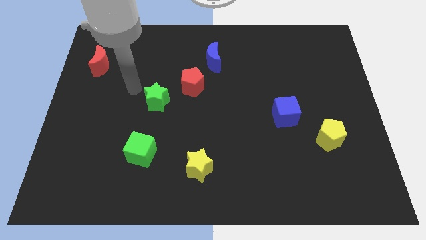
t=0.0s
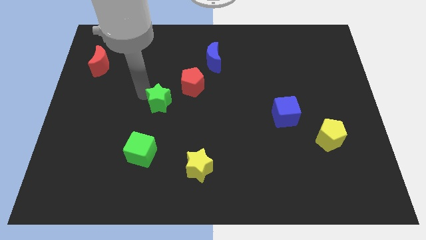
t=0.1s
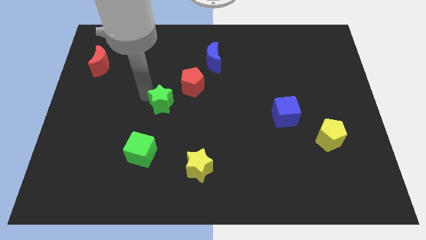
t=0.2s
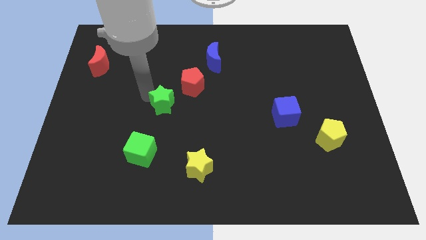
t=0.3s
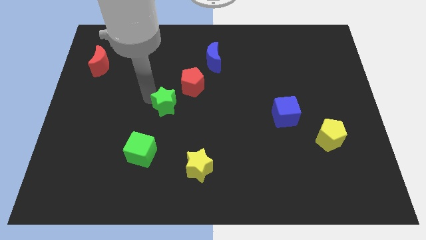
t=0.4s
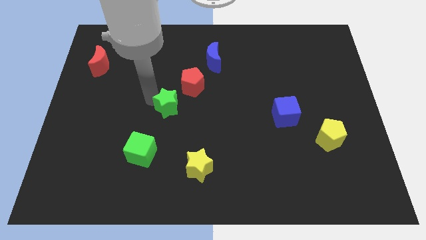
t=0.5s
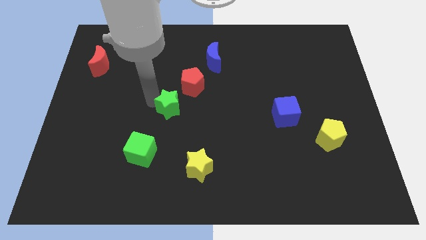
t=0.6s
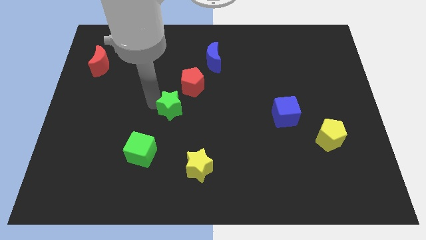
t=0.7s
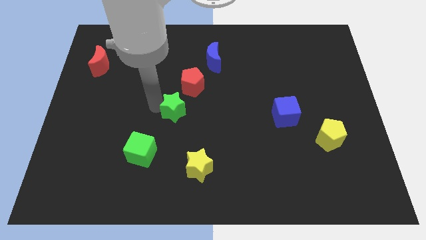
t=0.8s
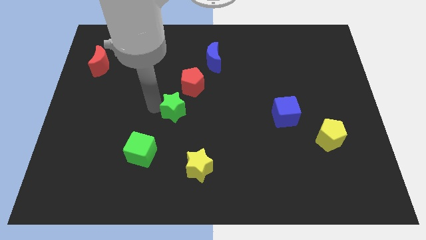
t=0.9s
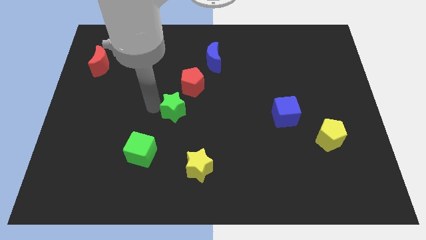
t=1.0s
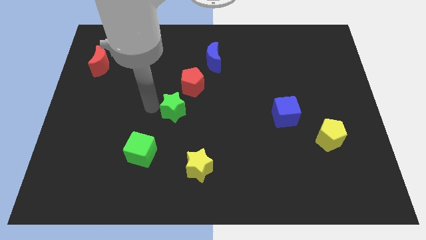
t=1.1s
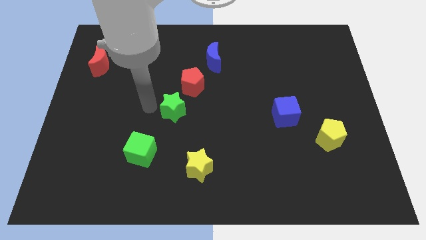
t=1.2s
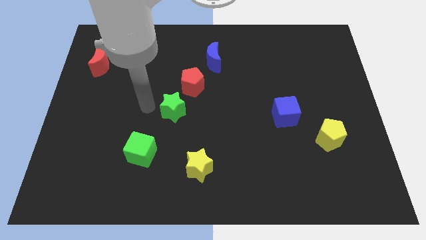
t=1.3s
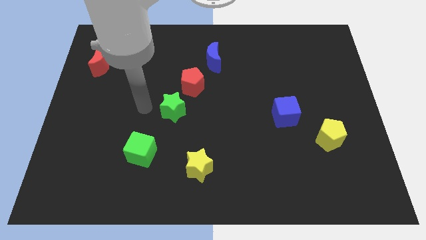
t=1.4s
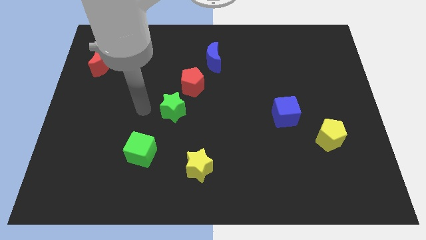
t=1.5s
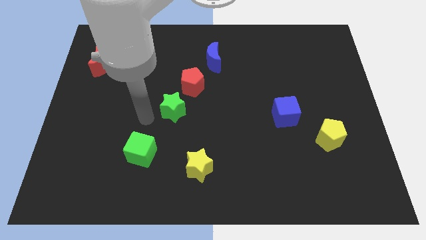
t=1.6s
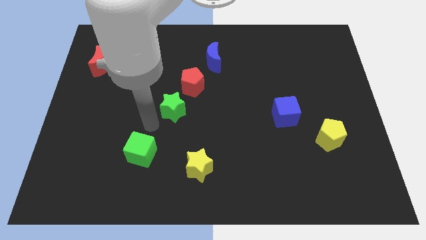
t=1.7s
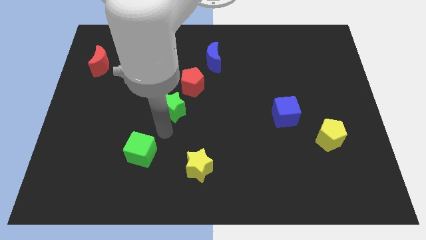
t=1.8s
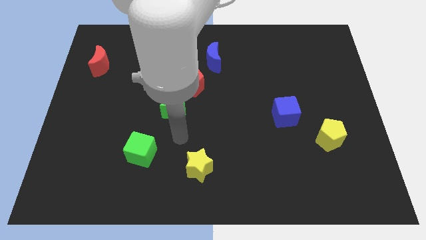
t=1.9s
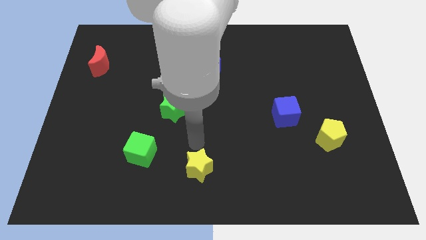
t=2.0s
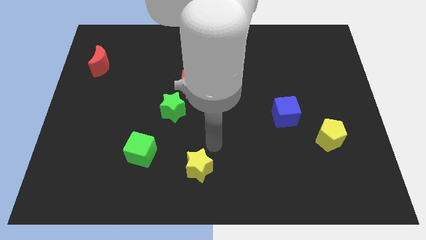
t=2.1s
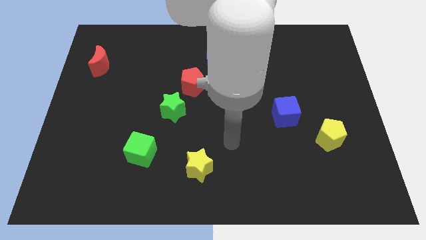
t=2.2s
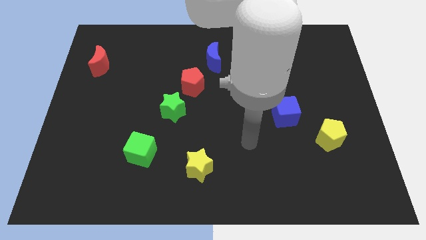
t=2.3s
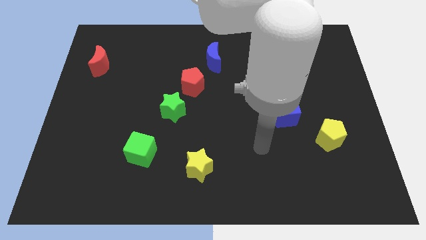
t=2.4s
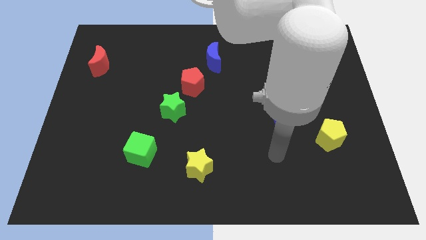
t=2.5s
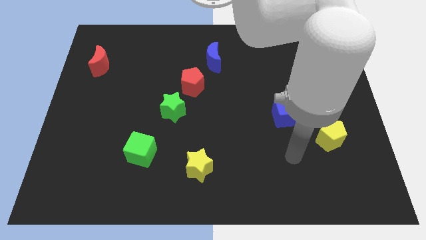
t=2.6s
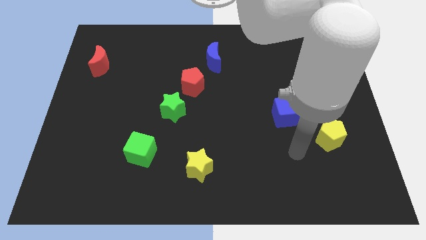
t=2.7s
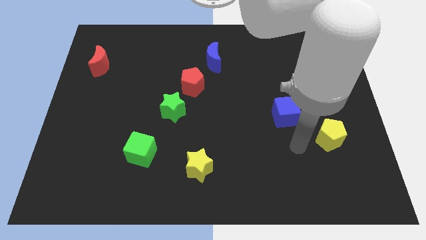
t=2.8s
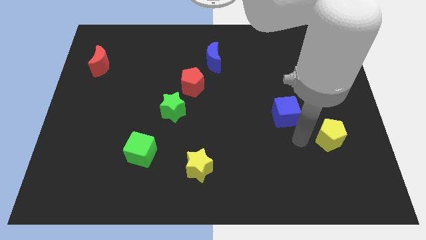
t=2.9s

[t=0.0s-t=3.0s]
push the green star slightly to the right

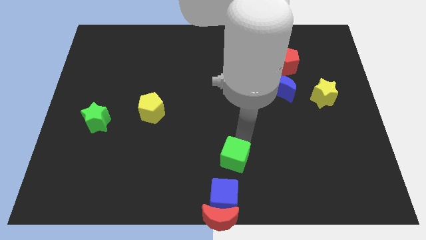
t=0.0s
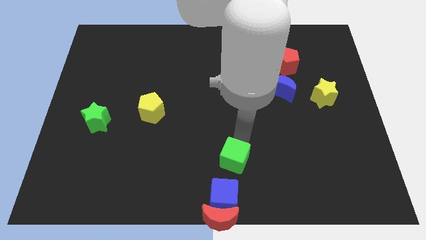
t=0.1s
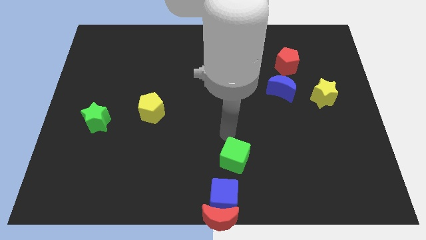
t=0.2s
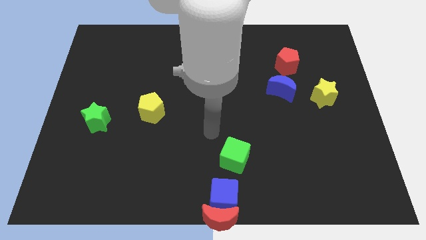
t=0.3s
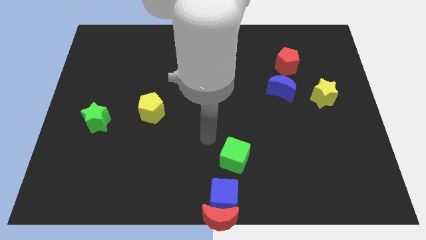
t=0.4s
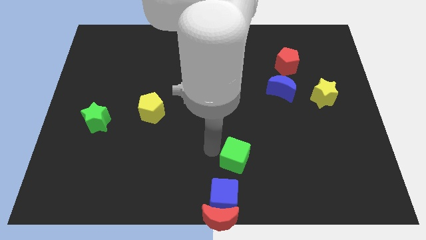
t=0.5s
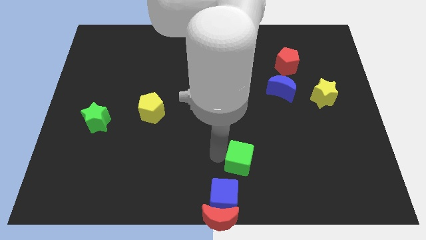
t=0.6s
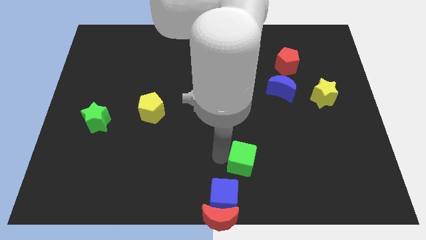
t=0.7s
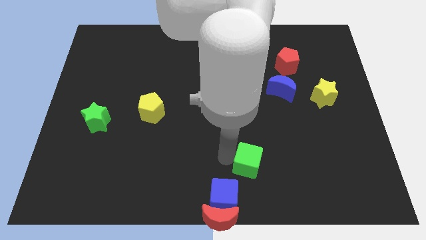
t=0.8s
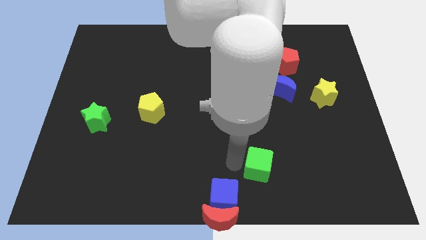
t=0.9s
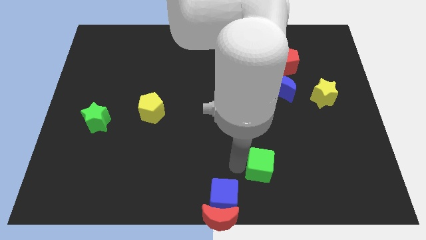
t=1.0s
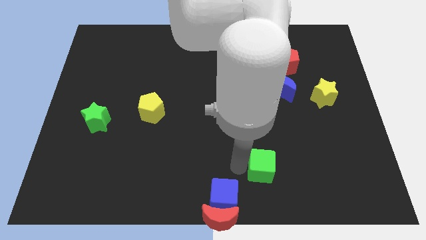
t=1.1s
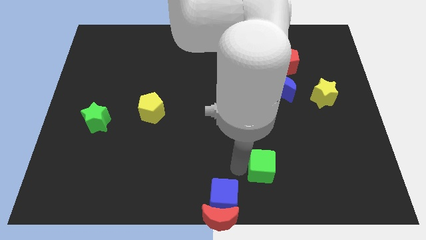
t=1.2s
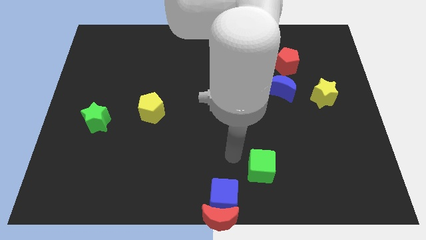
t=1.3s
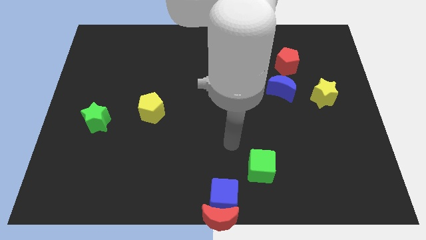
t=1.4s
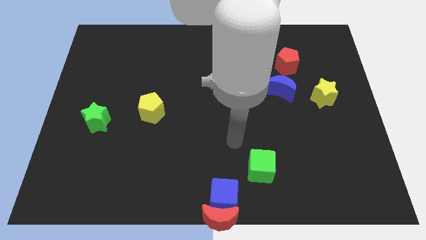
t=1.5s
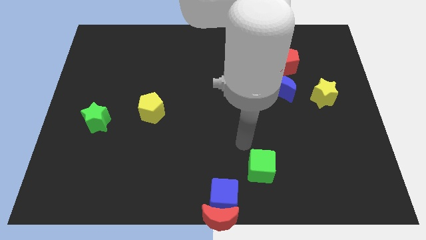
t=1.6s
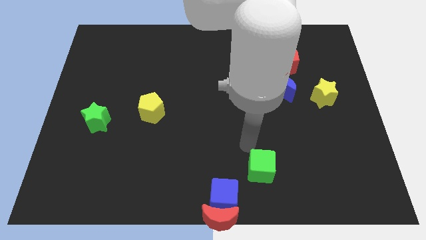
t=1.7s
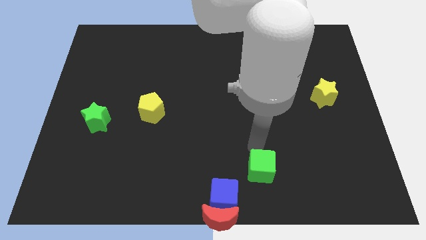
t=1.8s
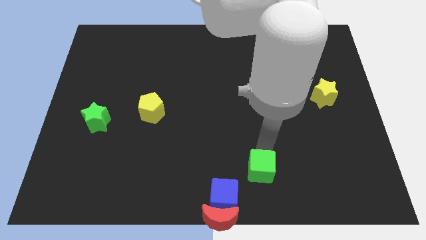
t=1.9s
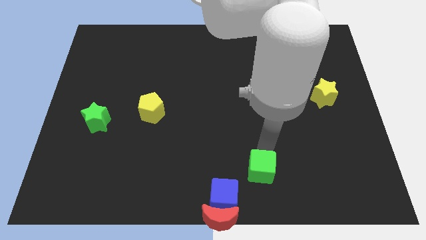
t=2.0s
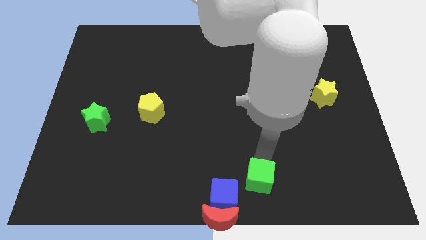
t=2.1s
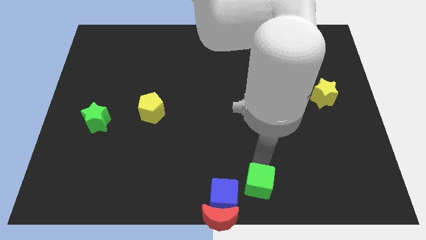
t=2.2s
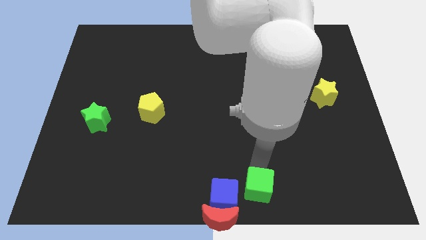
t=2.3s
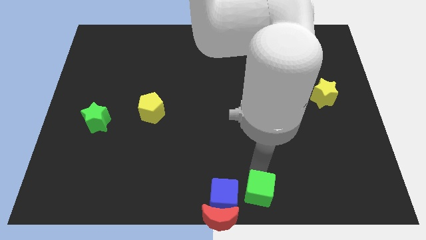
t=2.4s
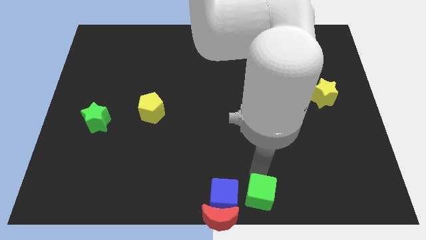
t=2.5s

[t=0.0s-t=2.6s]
place the green cube right to the blue cube

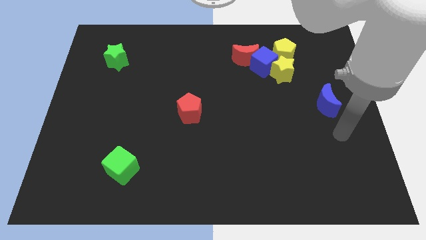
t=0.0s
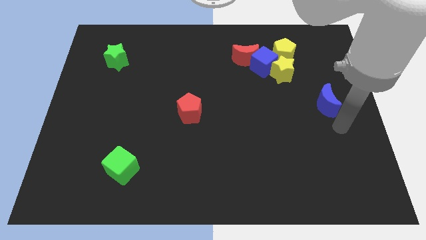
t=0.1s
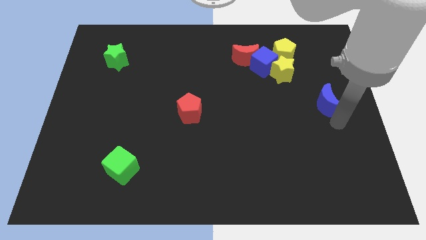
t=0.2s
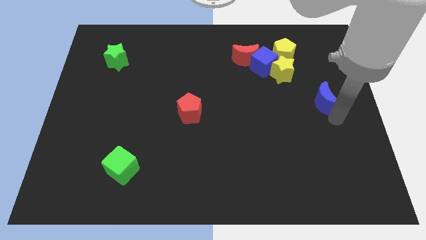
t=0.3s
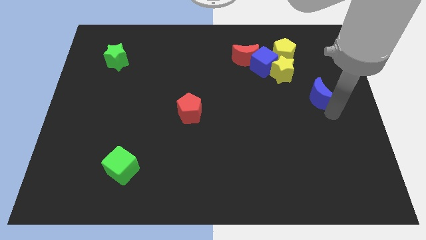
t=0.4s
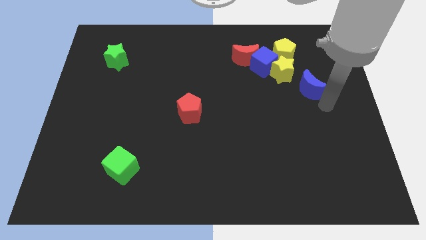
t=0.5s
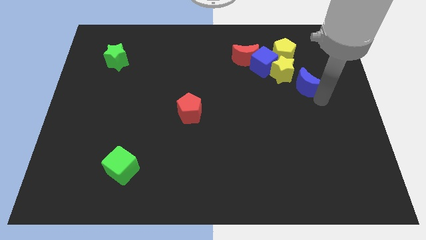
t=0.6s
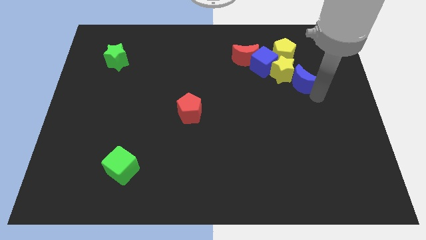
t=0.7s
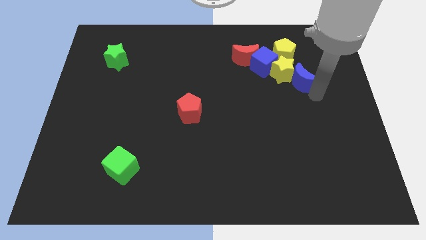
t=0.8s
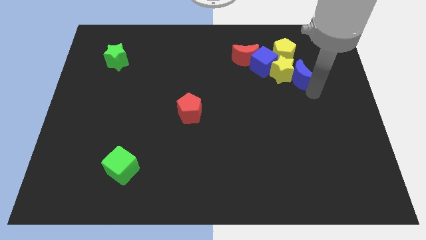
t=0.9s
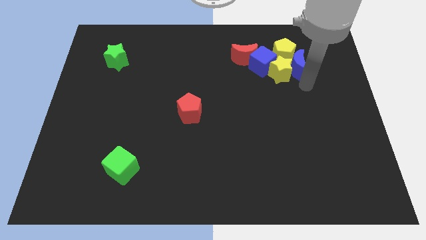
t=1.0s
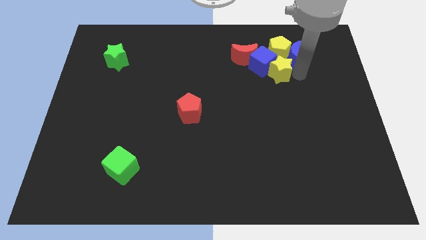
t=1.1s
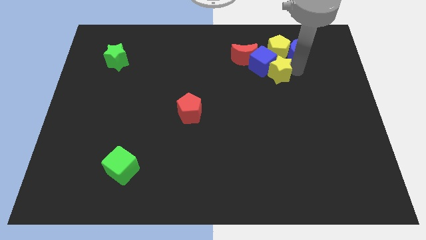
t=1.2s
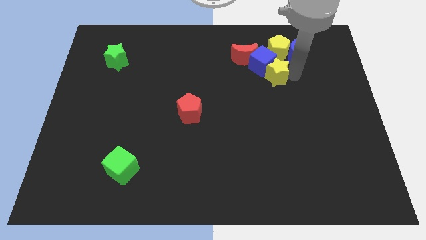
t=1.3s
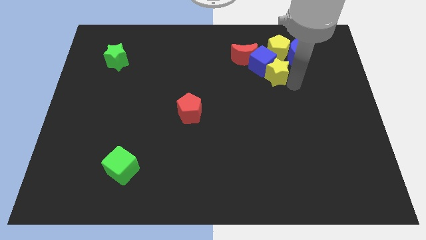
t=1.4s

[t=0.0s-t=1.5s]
move the blue crescent to the right of the yellow pentagon

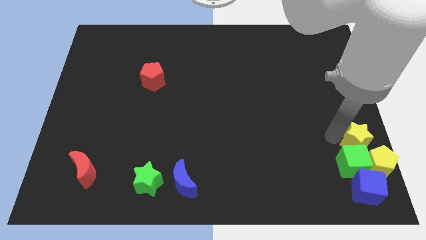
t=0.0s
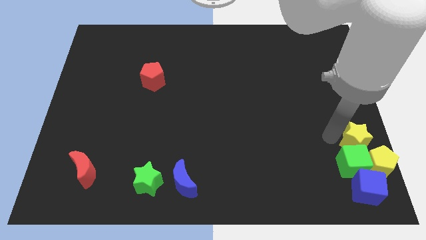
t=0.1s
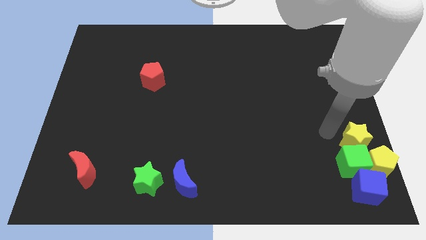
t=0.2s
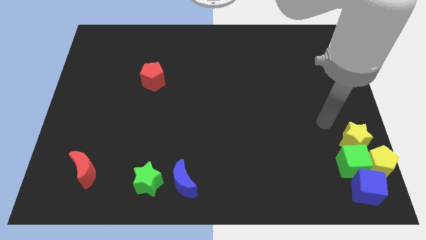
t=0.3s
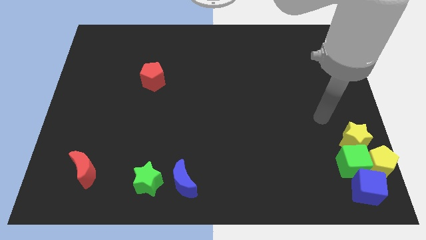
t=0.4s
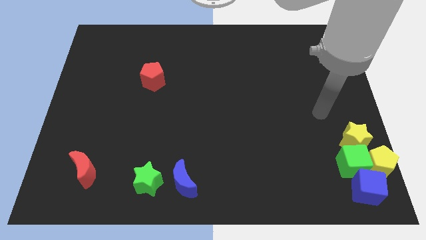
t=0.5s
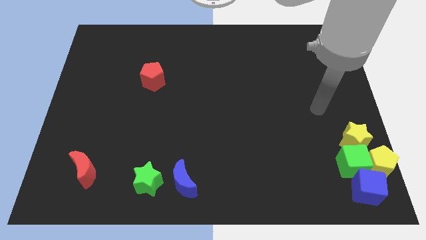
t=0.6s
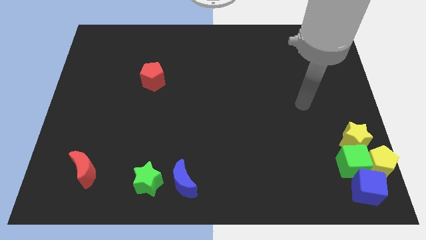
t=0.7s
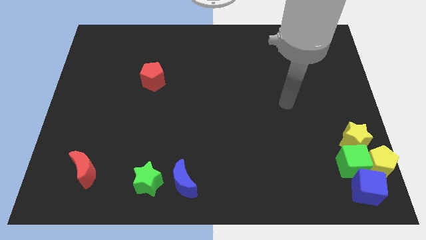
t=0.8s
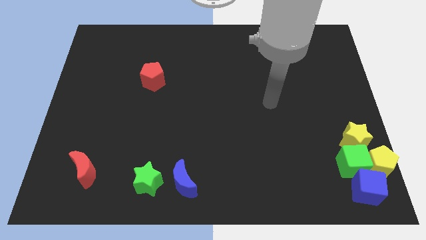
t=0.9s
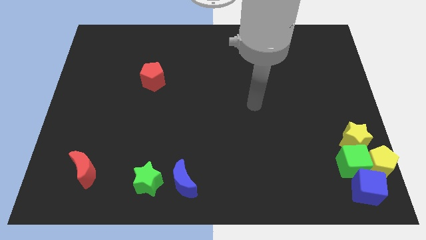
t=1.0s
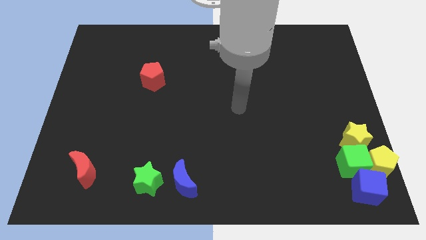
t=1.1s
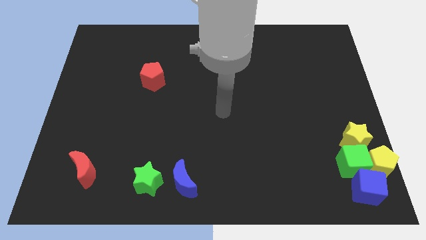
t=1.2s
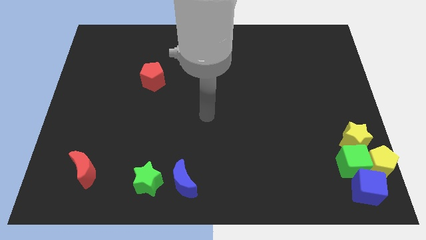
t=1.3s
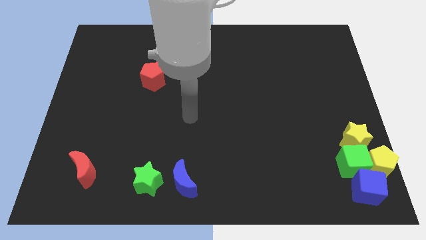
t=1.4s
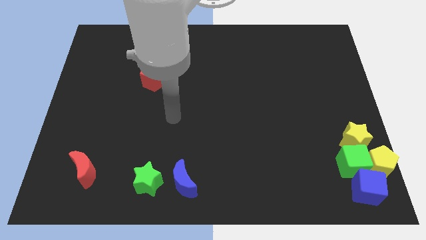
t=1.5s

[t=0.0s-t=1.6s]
drag your arm to the center

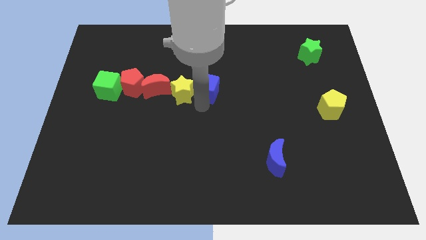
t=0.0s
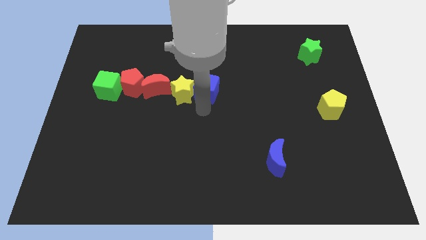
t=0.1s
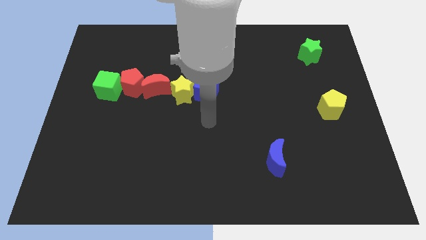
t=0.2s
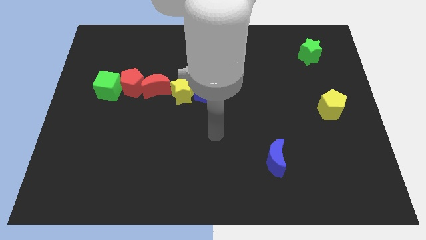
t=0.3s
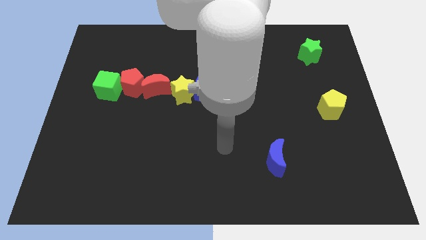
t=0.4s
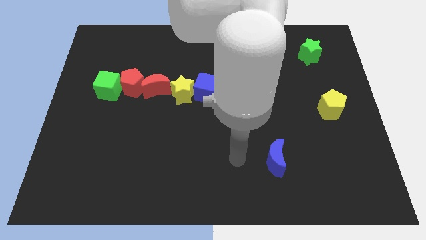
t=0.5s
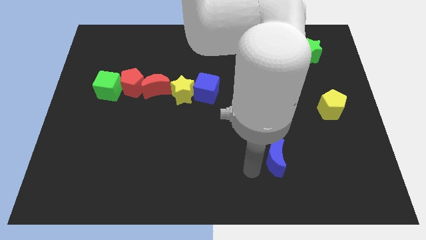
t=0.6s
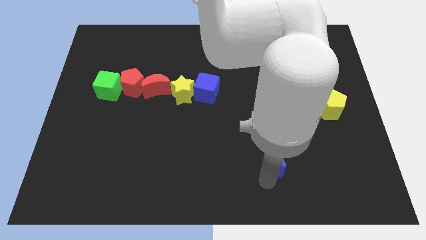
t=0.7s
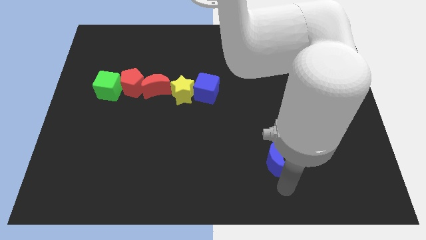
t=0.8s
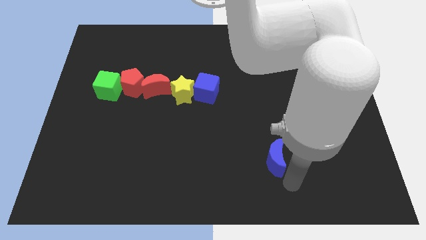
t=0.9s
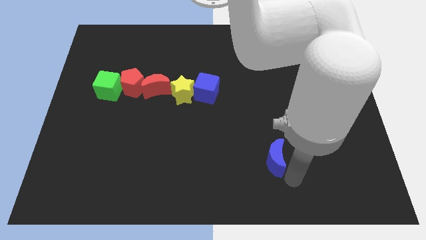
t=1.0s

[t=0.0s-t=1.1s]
move the arm away from the blue cube
